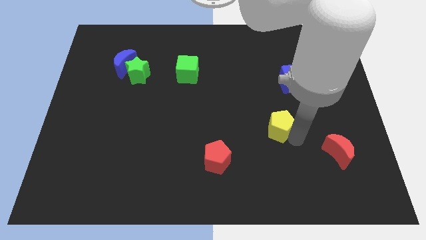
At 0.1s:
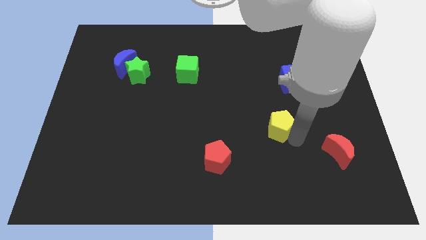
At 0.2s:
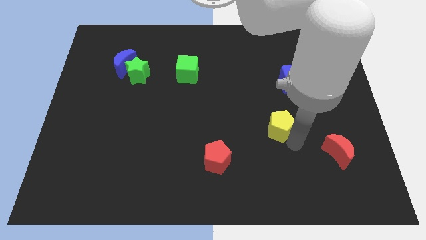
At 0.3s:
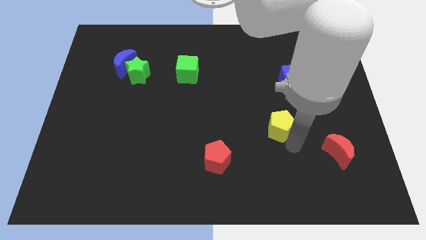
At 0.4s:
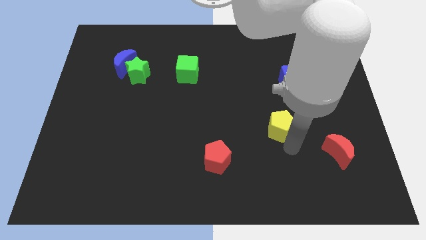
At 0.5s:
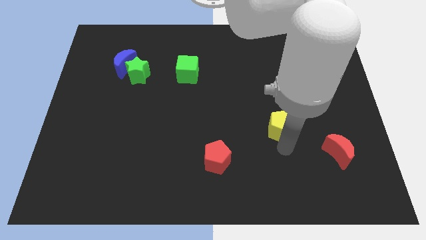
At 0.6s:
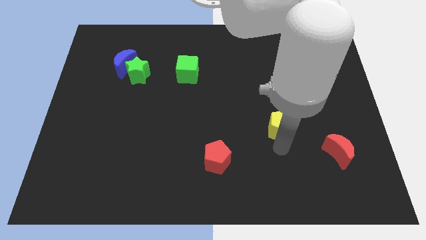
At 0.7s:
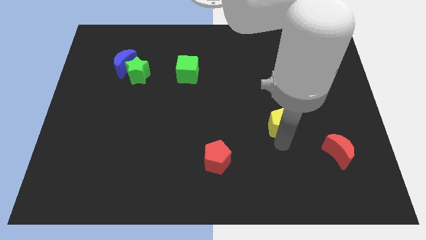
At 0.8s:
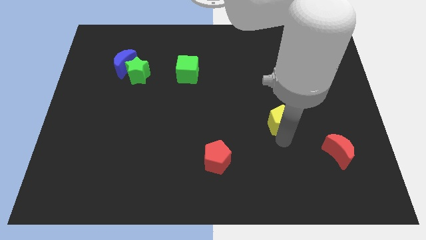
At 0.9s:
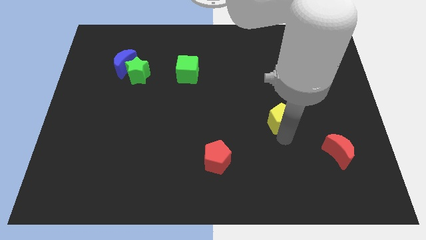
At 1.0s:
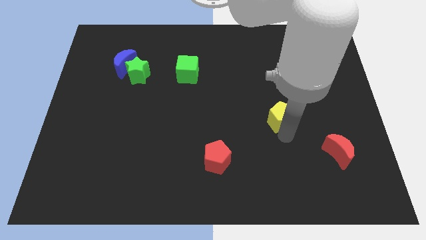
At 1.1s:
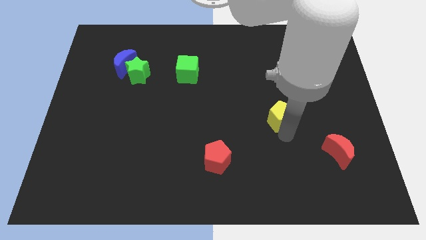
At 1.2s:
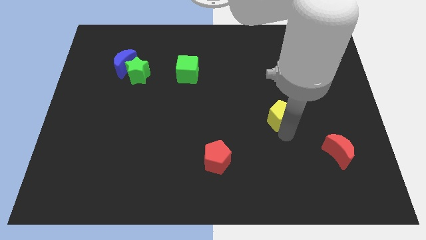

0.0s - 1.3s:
move the yellow pentagon slightly towards the top

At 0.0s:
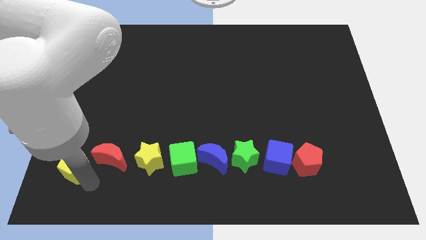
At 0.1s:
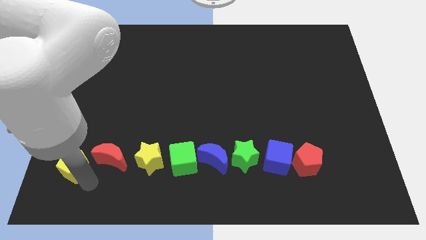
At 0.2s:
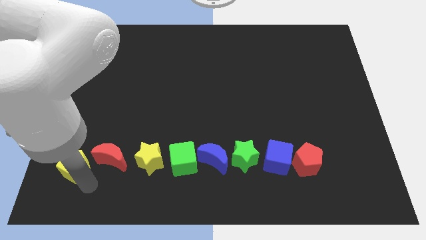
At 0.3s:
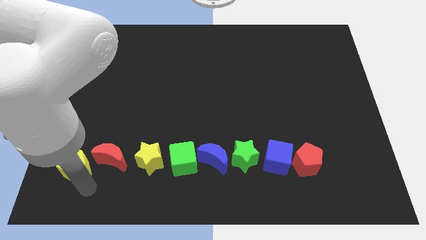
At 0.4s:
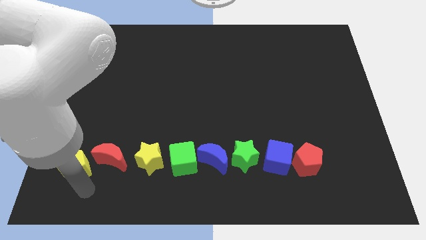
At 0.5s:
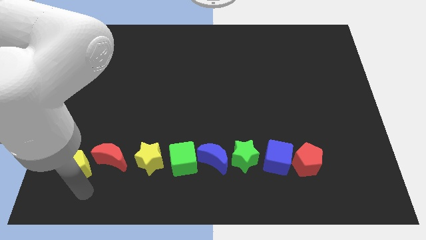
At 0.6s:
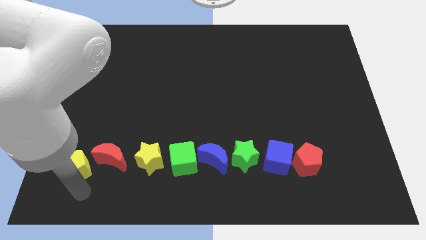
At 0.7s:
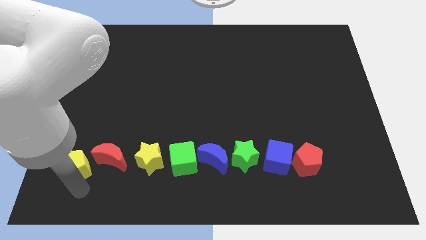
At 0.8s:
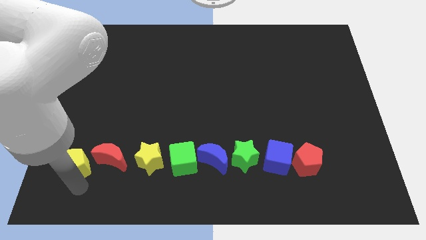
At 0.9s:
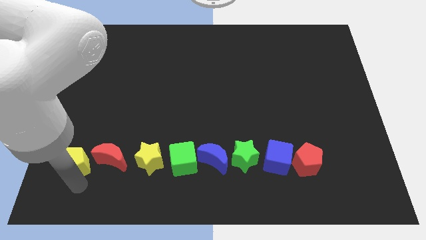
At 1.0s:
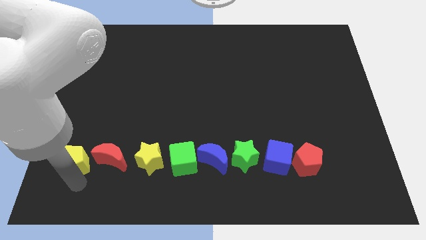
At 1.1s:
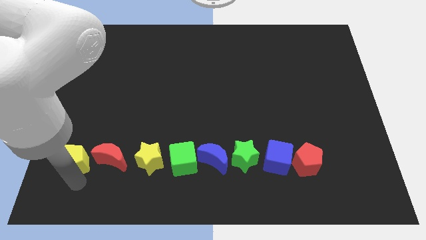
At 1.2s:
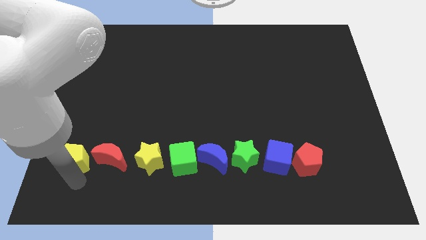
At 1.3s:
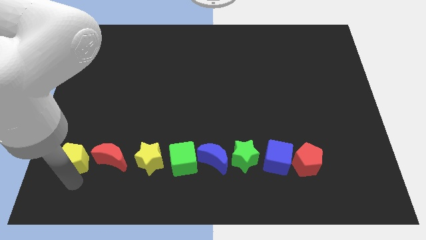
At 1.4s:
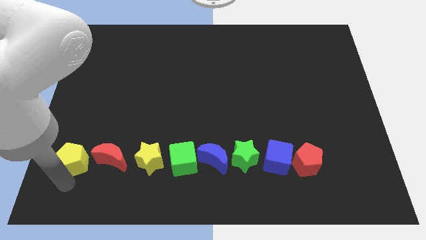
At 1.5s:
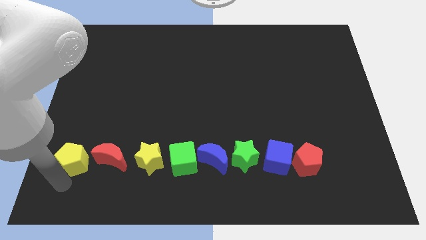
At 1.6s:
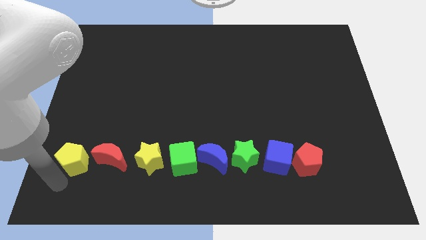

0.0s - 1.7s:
push the yellow pentagon to the left of the red crescent

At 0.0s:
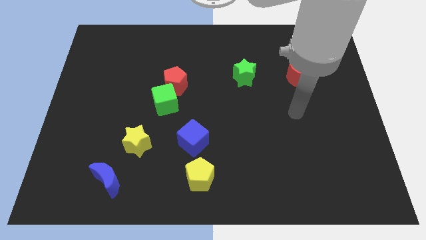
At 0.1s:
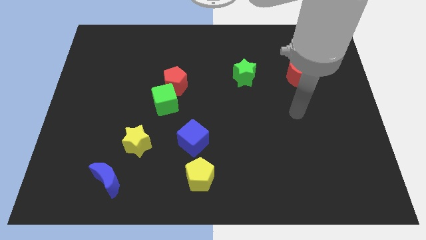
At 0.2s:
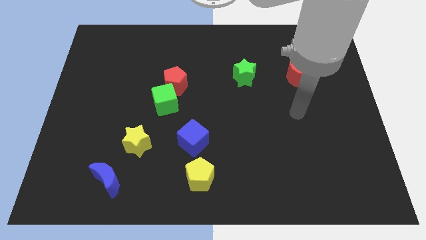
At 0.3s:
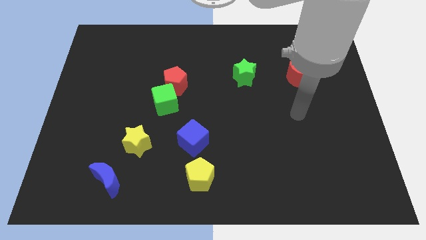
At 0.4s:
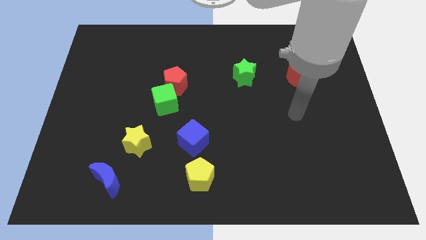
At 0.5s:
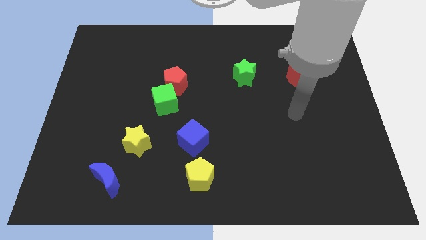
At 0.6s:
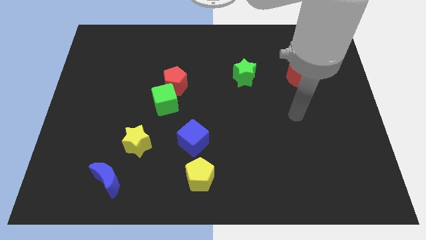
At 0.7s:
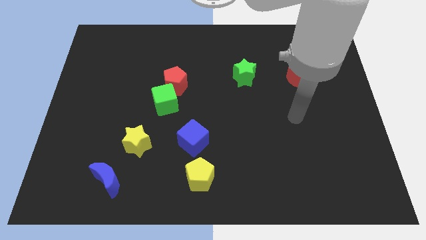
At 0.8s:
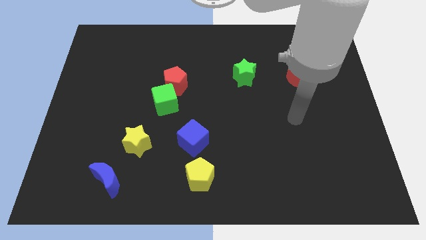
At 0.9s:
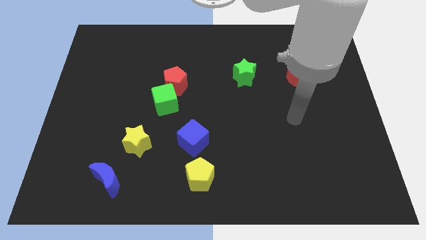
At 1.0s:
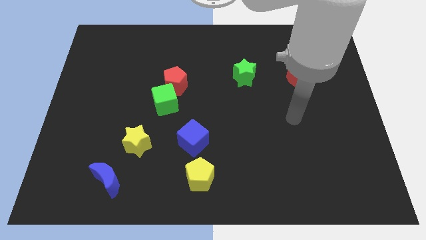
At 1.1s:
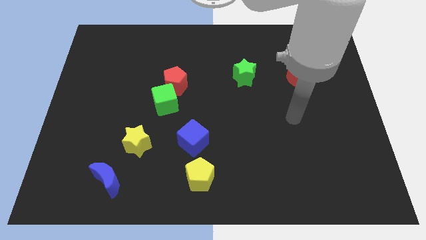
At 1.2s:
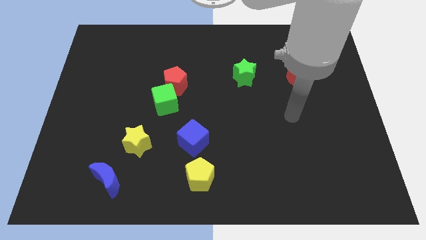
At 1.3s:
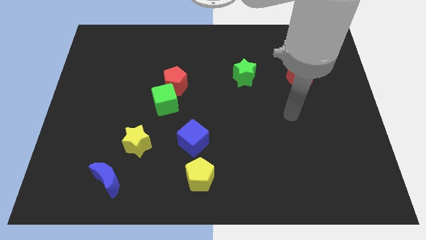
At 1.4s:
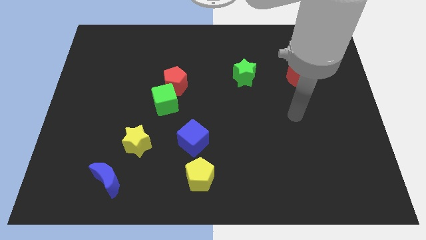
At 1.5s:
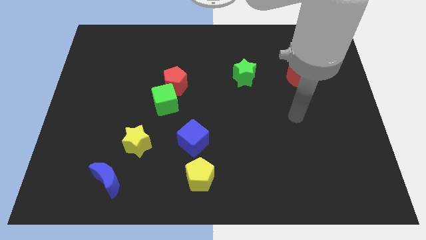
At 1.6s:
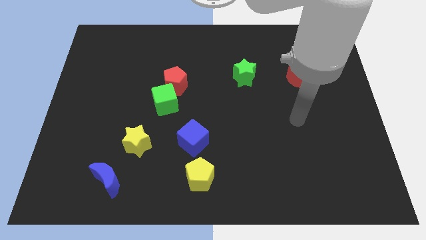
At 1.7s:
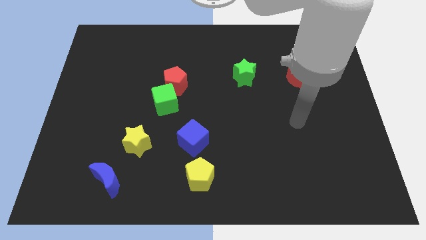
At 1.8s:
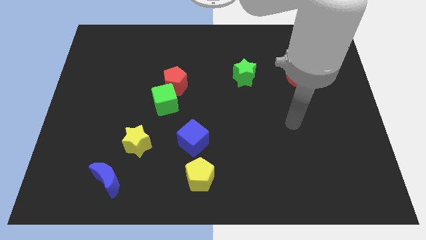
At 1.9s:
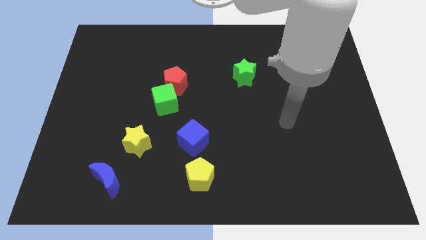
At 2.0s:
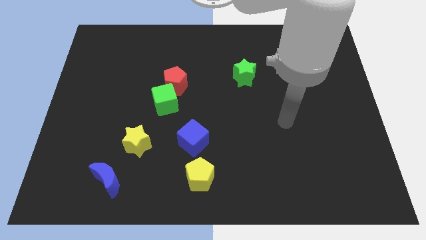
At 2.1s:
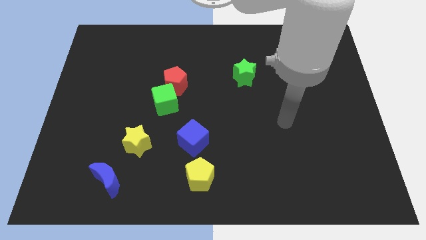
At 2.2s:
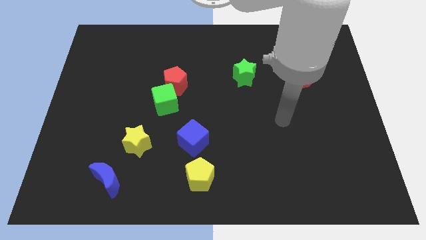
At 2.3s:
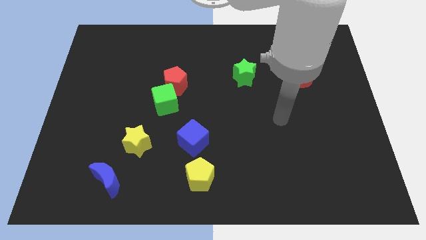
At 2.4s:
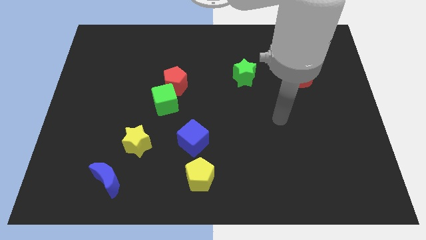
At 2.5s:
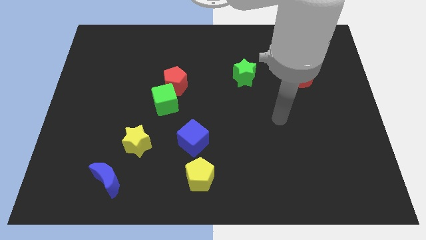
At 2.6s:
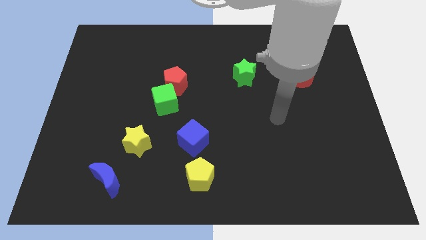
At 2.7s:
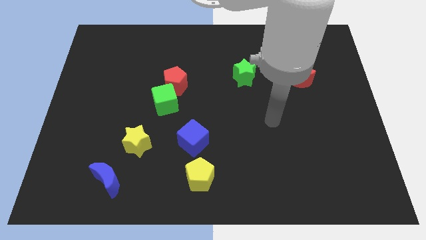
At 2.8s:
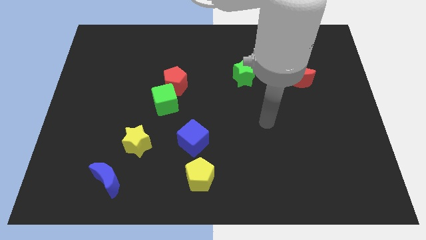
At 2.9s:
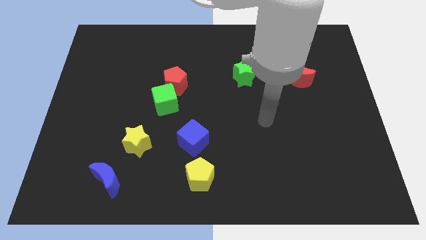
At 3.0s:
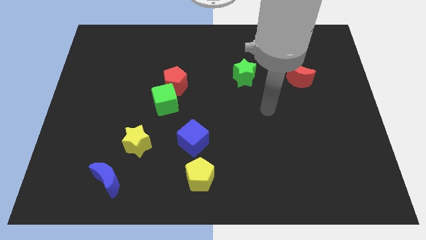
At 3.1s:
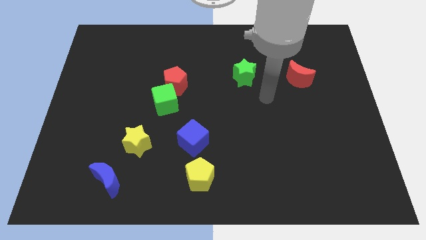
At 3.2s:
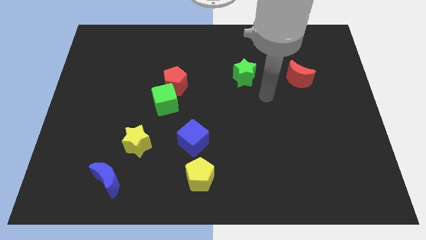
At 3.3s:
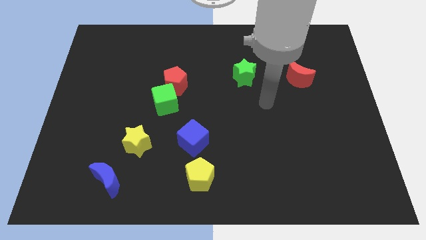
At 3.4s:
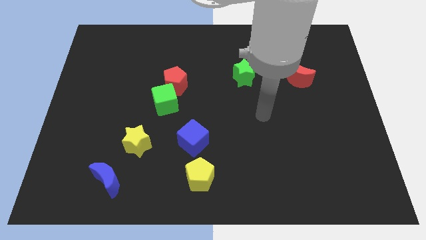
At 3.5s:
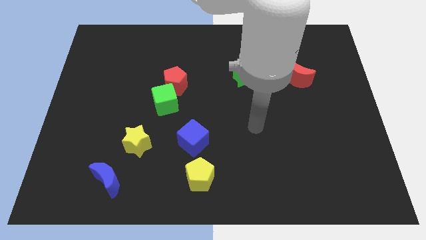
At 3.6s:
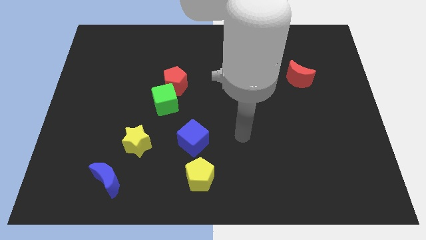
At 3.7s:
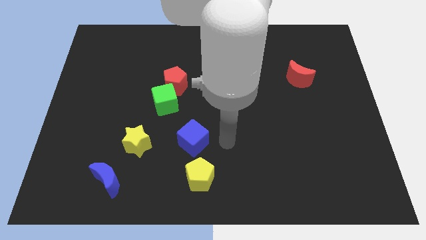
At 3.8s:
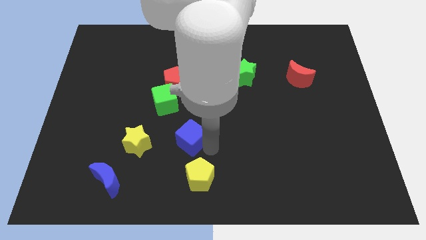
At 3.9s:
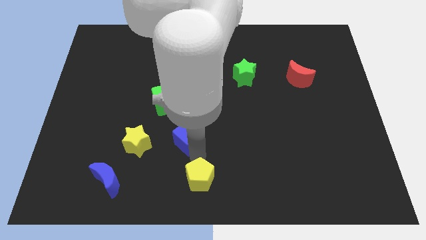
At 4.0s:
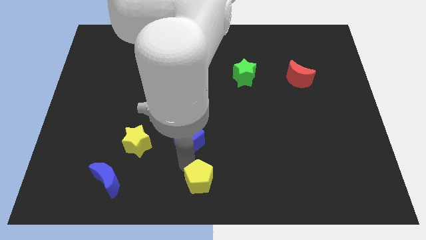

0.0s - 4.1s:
tap the yellow pentagon

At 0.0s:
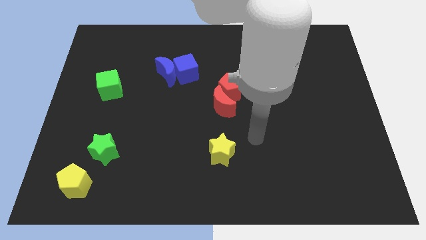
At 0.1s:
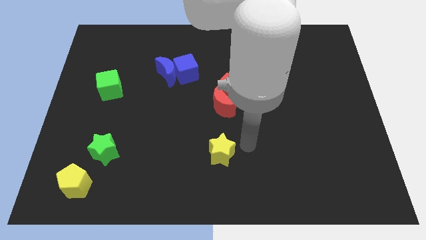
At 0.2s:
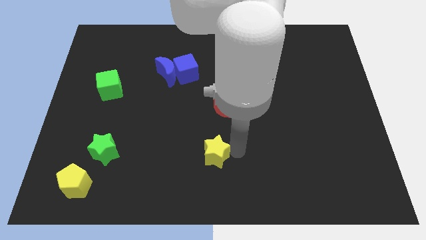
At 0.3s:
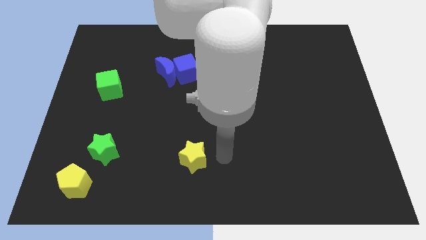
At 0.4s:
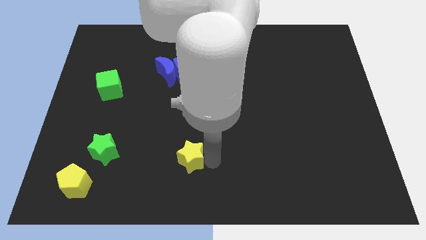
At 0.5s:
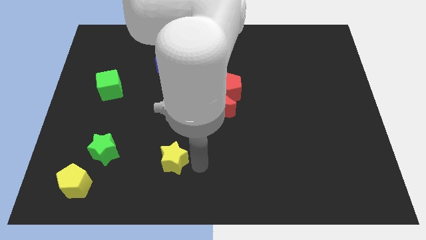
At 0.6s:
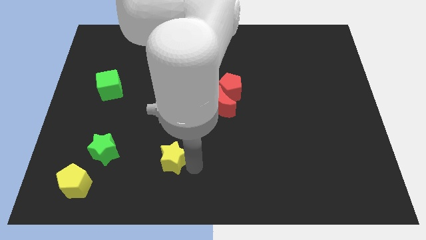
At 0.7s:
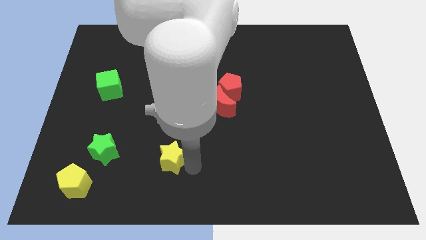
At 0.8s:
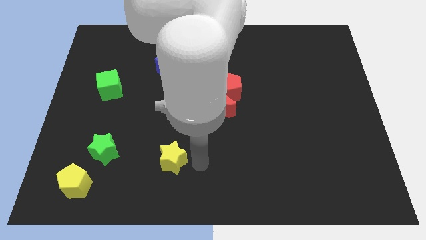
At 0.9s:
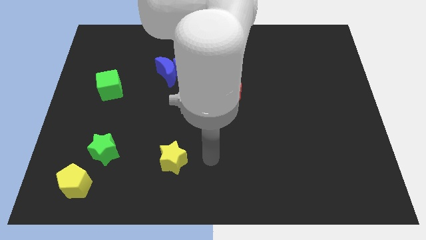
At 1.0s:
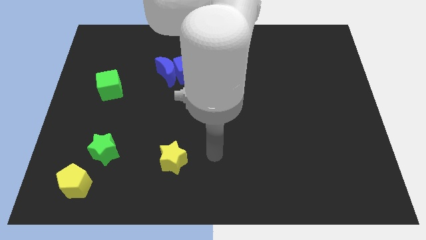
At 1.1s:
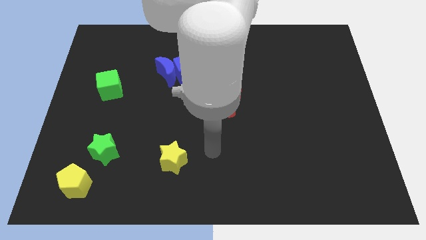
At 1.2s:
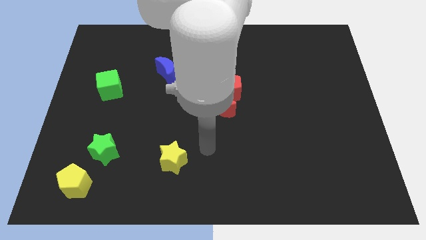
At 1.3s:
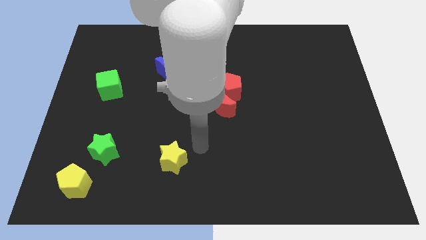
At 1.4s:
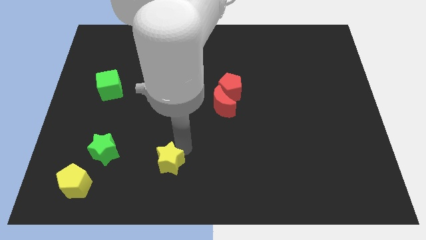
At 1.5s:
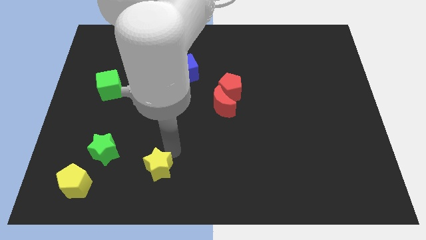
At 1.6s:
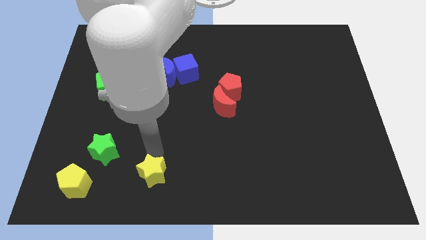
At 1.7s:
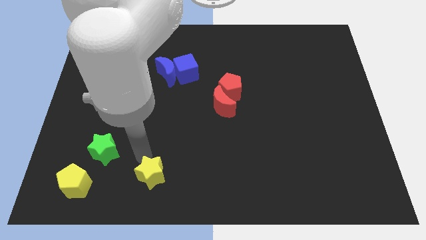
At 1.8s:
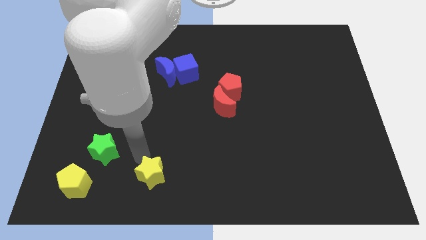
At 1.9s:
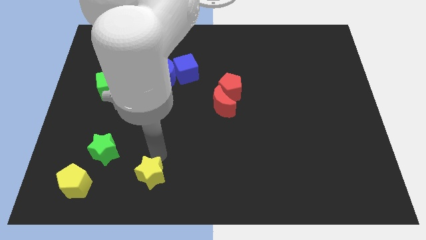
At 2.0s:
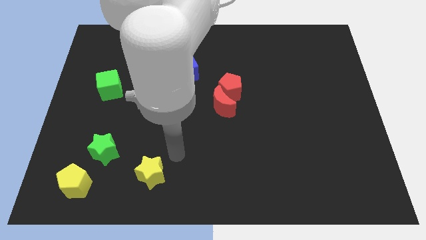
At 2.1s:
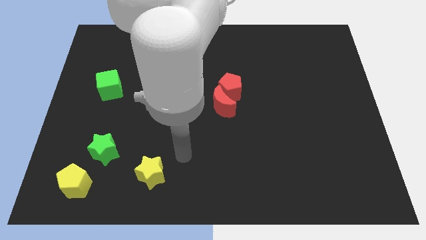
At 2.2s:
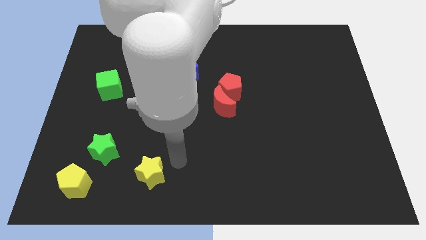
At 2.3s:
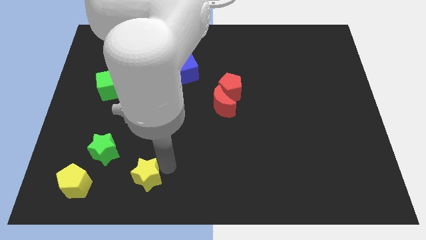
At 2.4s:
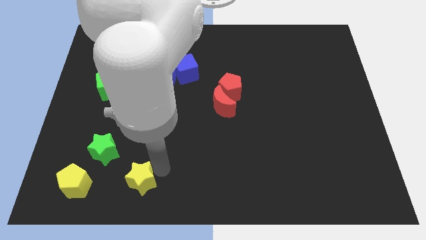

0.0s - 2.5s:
move the yellow star parallel to the yellow pentagon
